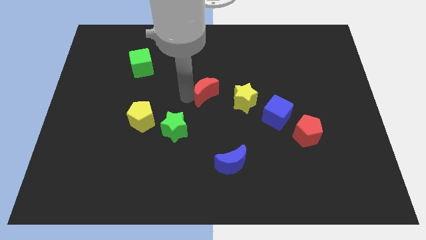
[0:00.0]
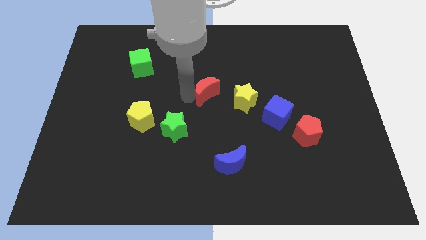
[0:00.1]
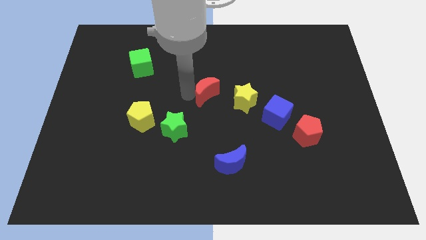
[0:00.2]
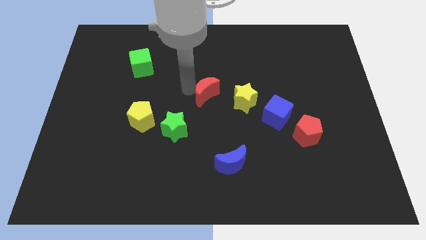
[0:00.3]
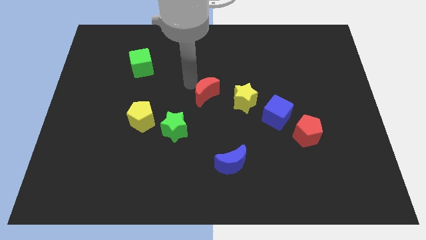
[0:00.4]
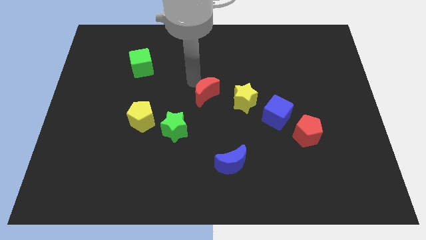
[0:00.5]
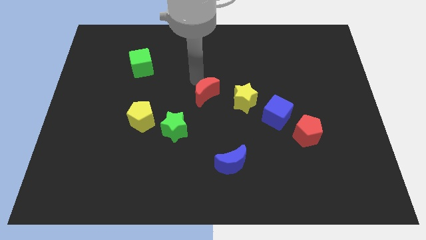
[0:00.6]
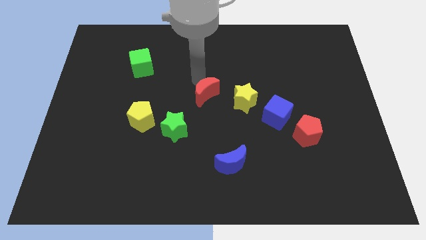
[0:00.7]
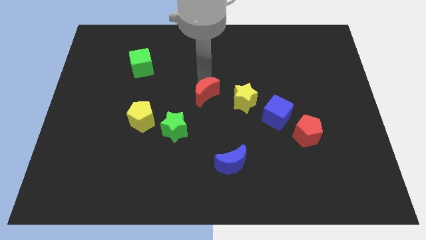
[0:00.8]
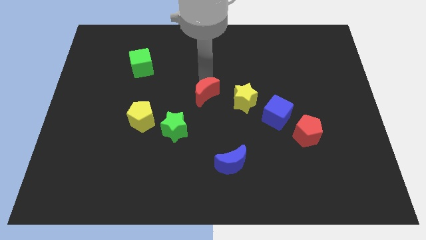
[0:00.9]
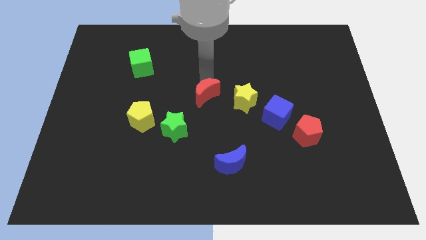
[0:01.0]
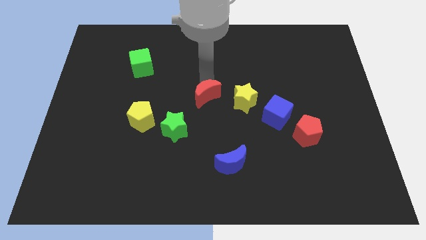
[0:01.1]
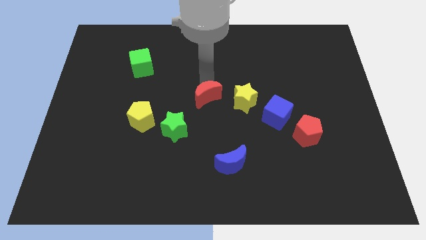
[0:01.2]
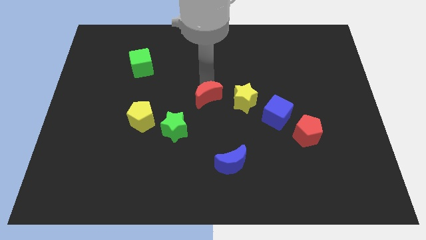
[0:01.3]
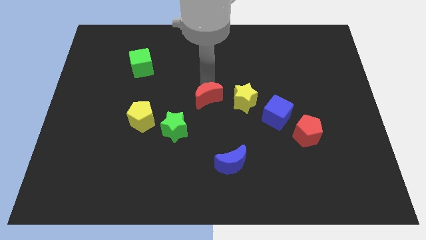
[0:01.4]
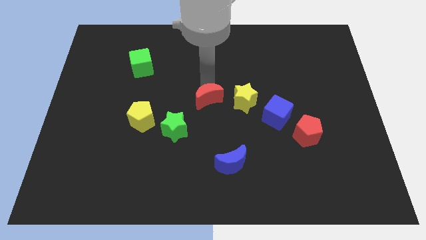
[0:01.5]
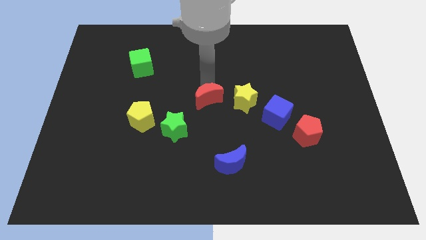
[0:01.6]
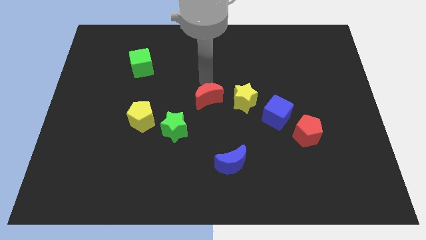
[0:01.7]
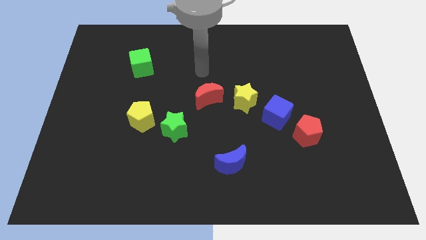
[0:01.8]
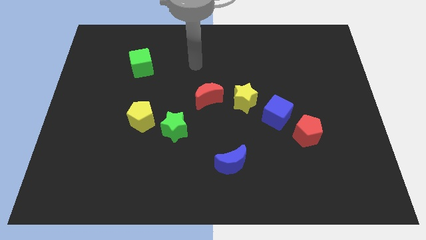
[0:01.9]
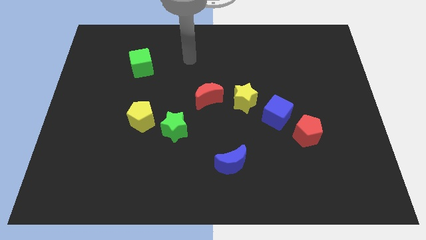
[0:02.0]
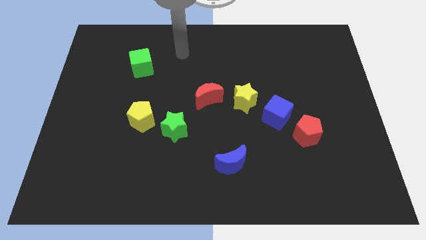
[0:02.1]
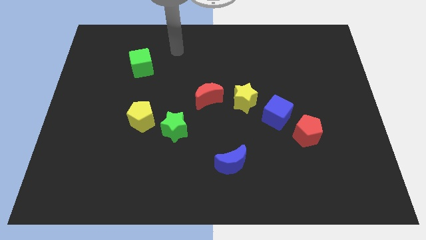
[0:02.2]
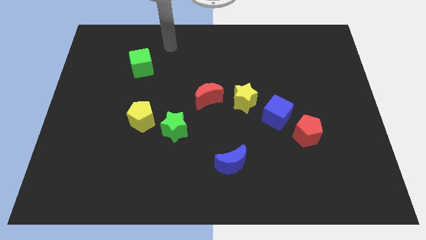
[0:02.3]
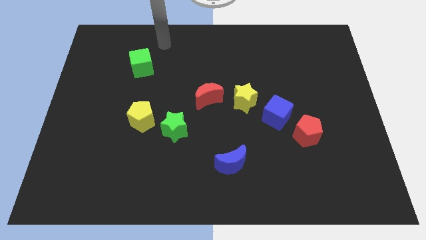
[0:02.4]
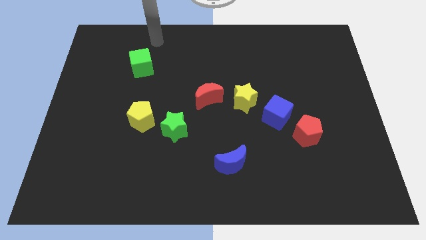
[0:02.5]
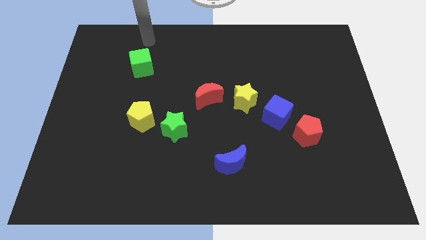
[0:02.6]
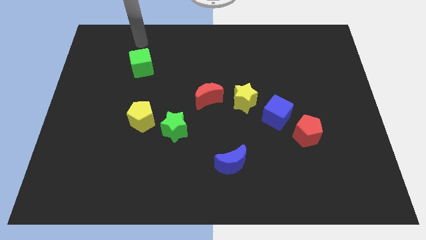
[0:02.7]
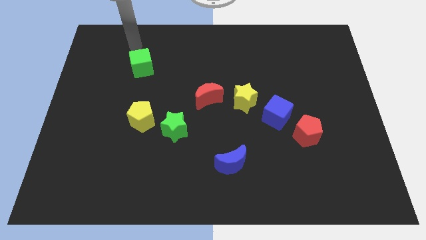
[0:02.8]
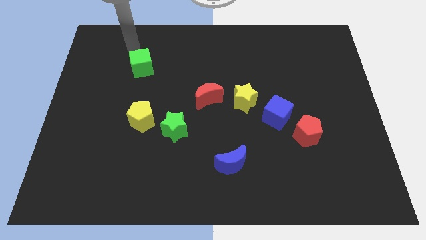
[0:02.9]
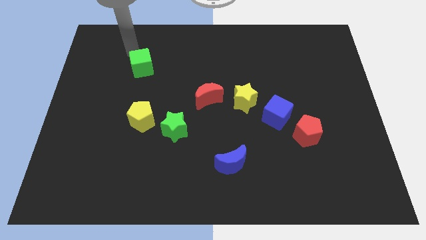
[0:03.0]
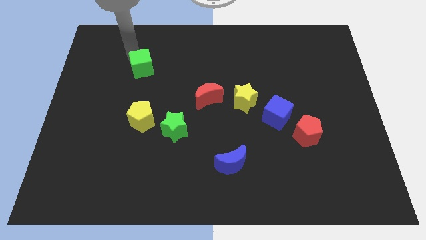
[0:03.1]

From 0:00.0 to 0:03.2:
point your arm to the top of the green cube

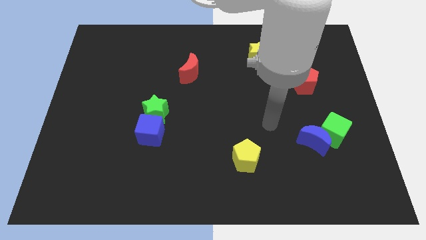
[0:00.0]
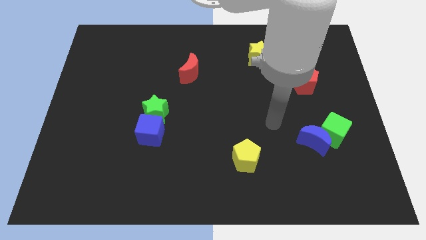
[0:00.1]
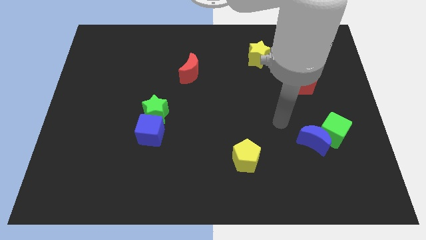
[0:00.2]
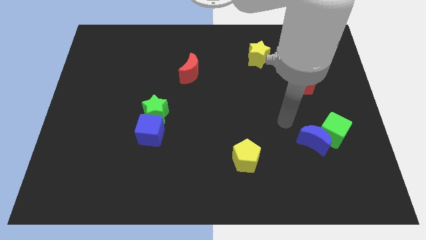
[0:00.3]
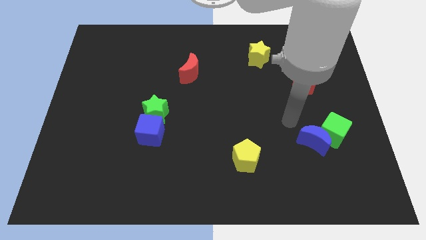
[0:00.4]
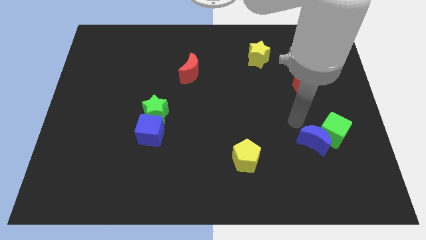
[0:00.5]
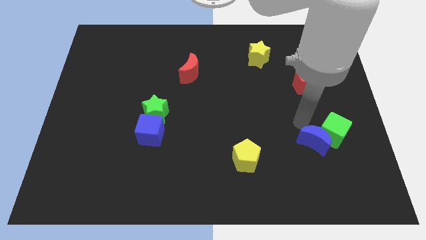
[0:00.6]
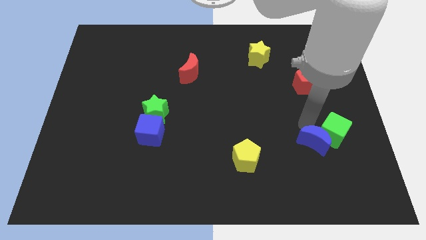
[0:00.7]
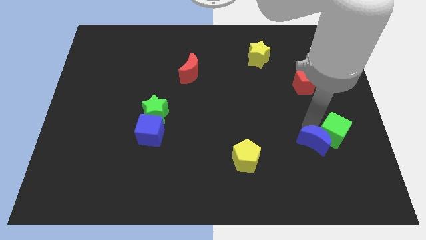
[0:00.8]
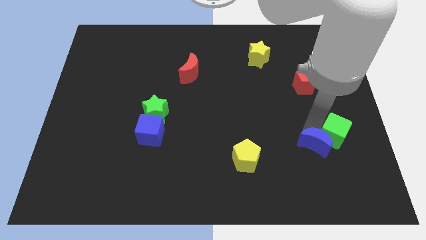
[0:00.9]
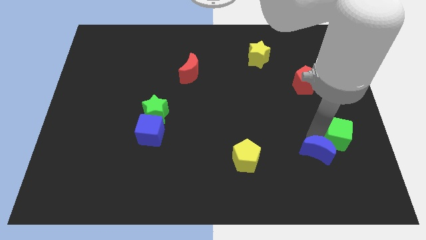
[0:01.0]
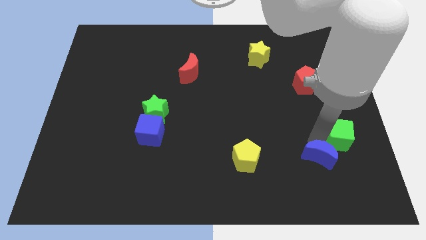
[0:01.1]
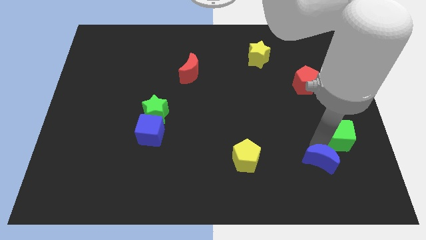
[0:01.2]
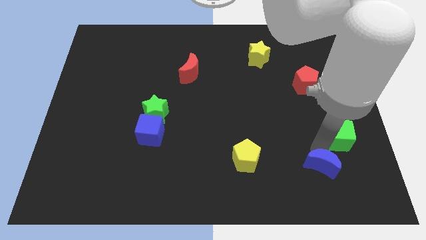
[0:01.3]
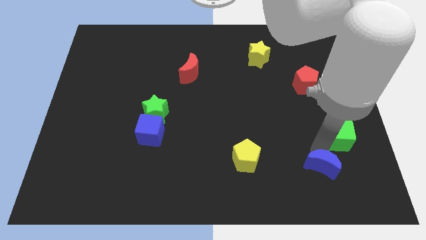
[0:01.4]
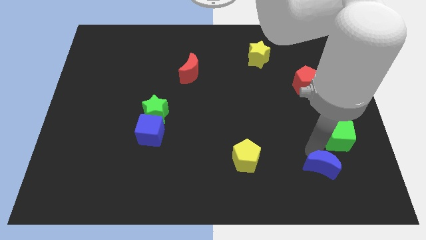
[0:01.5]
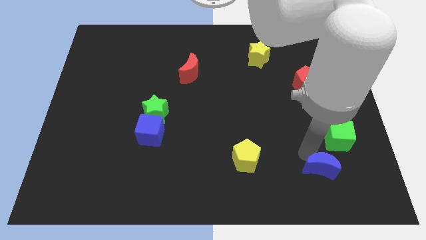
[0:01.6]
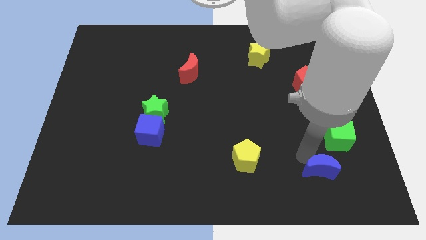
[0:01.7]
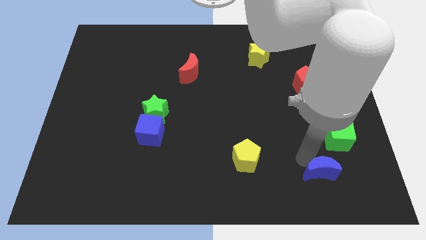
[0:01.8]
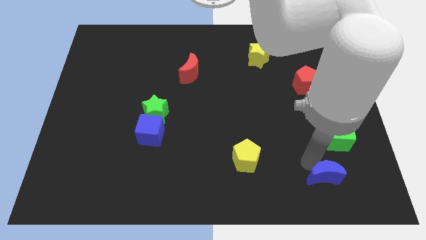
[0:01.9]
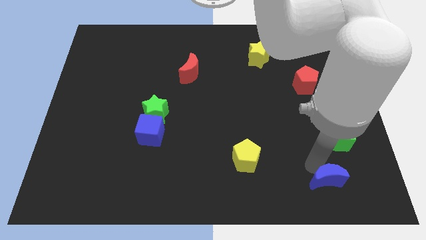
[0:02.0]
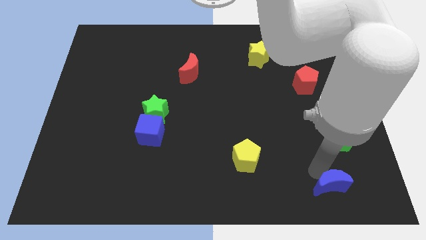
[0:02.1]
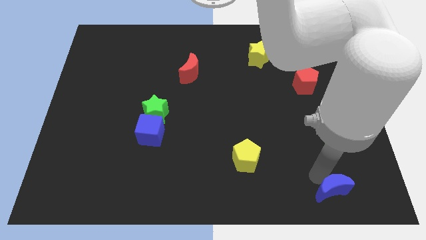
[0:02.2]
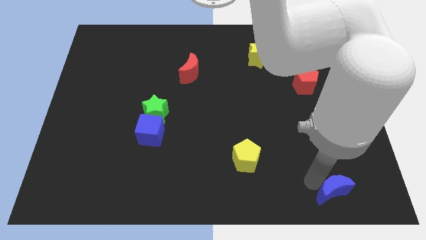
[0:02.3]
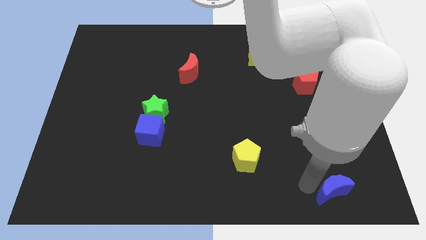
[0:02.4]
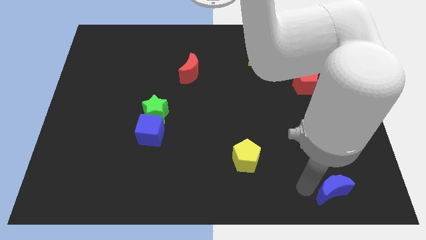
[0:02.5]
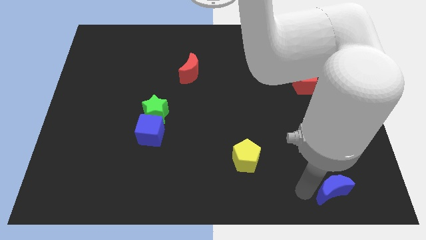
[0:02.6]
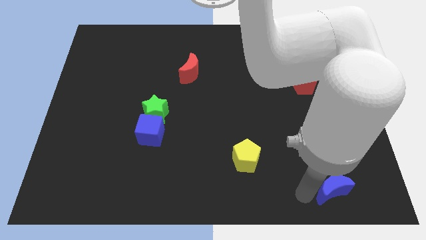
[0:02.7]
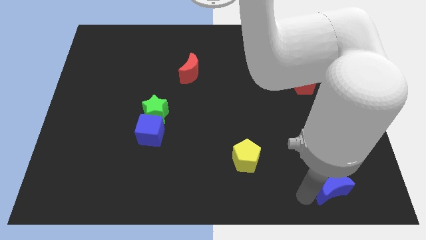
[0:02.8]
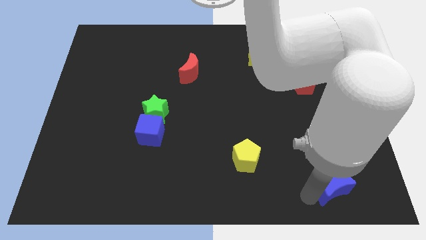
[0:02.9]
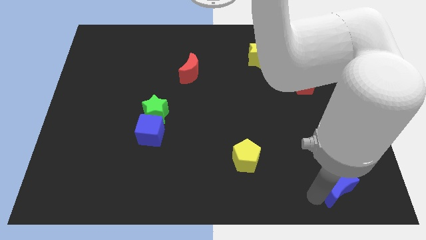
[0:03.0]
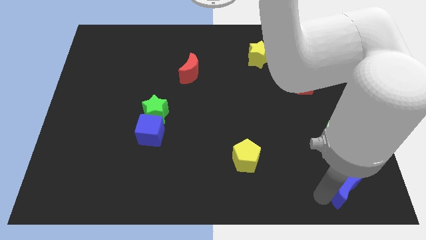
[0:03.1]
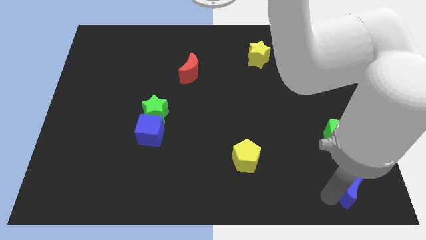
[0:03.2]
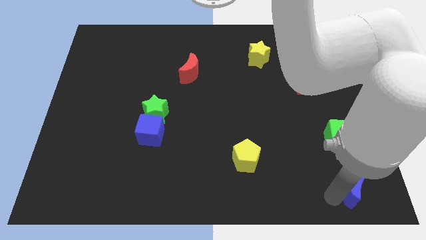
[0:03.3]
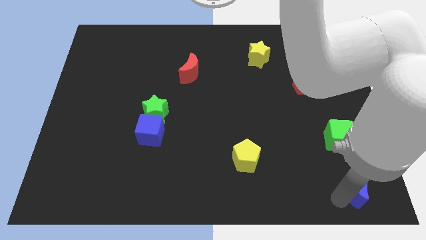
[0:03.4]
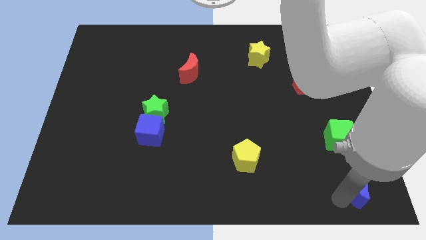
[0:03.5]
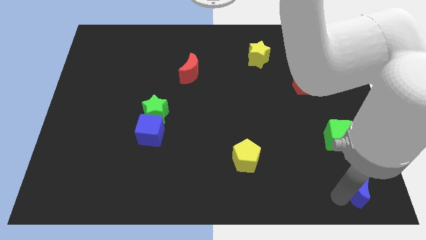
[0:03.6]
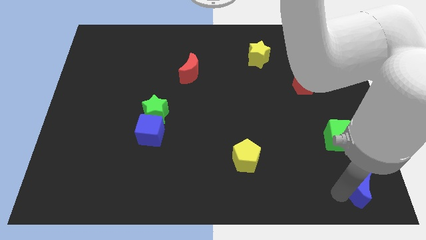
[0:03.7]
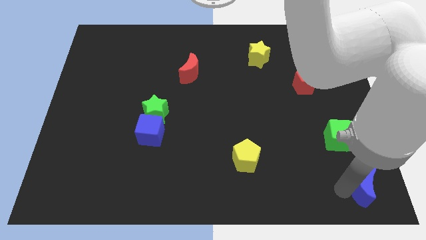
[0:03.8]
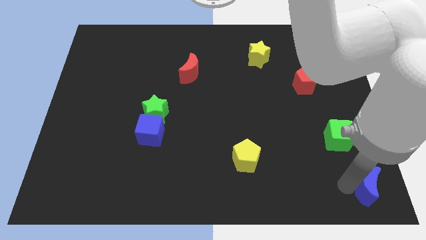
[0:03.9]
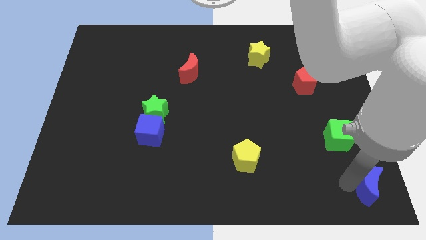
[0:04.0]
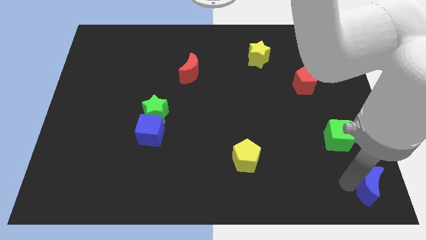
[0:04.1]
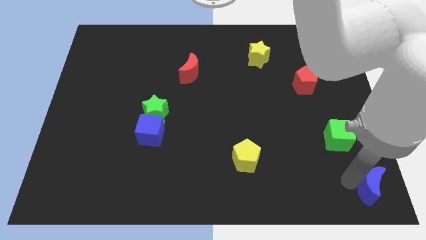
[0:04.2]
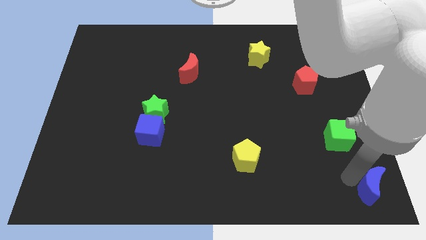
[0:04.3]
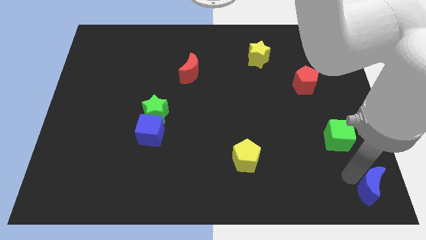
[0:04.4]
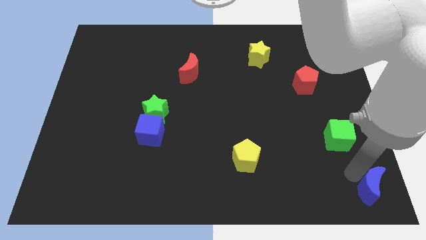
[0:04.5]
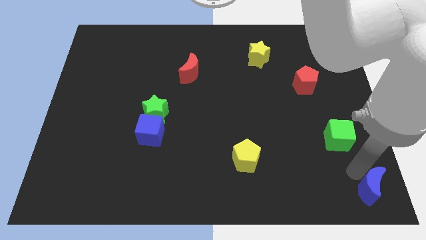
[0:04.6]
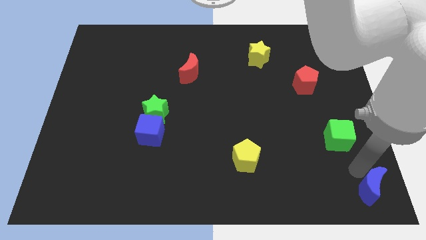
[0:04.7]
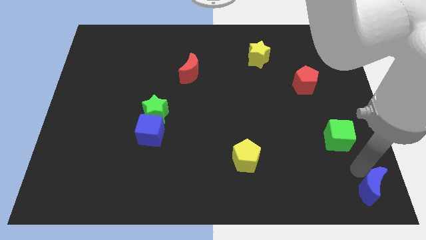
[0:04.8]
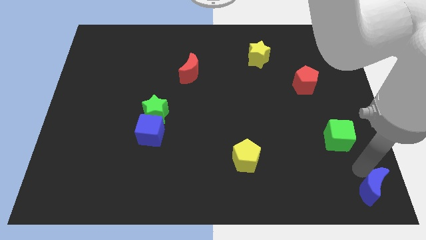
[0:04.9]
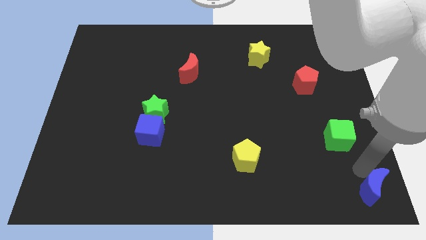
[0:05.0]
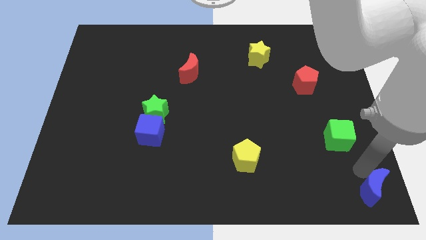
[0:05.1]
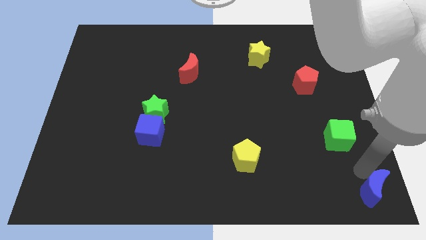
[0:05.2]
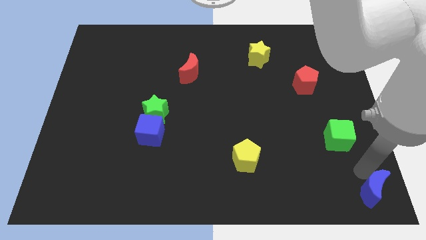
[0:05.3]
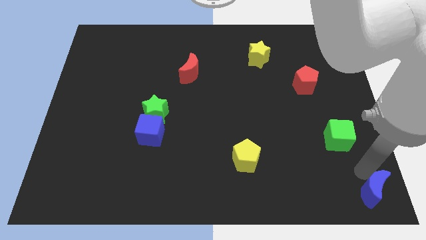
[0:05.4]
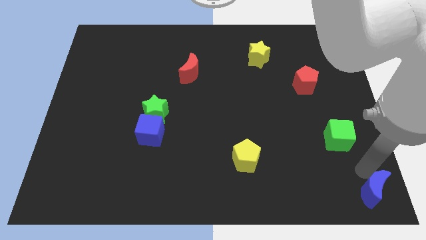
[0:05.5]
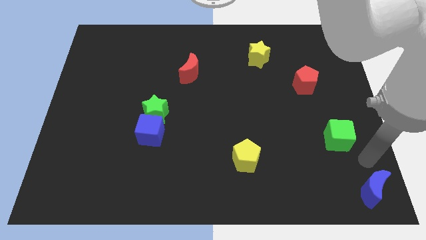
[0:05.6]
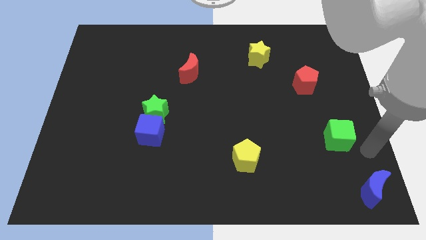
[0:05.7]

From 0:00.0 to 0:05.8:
move the blue moon to the right bottom corner
